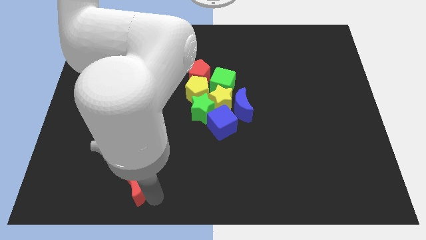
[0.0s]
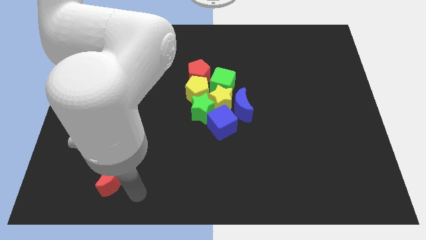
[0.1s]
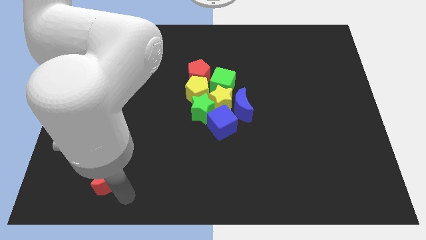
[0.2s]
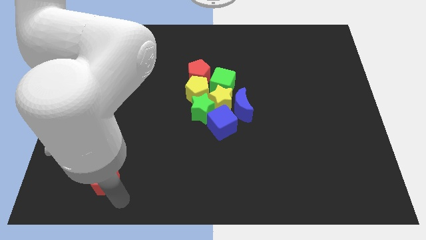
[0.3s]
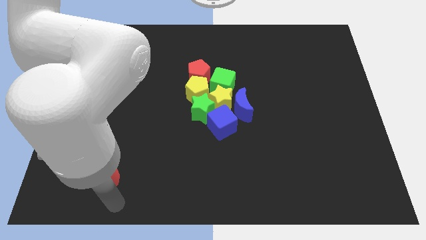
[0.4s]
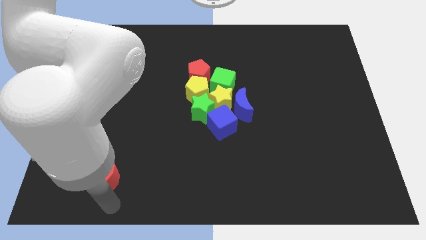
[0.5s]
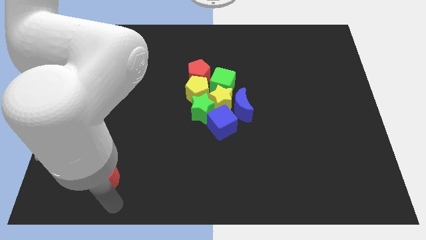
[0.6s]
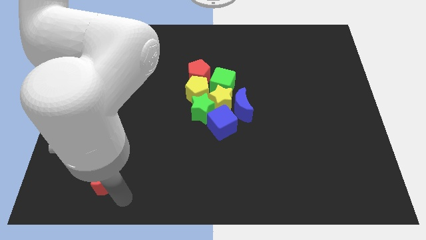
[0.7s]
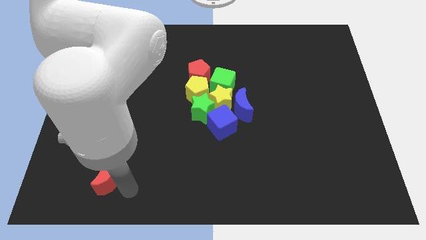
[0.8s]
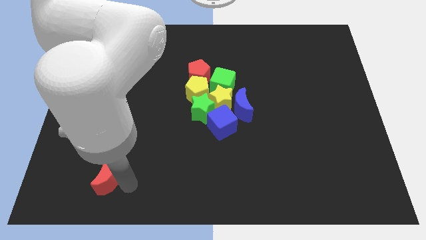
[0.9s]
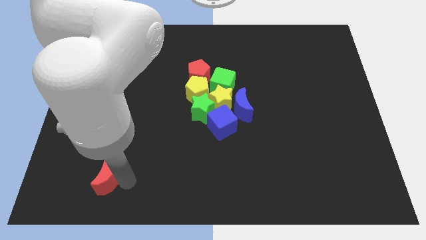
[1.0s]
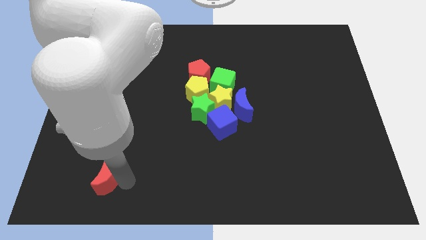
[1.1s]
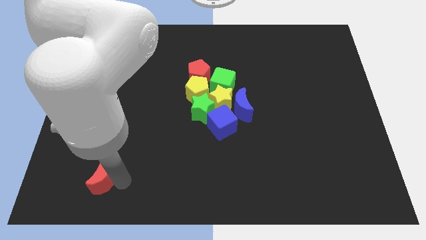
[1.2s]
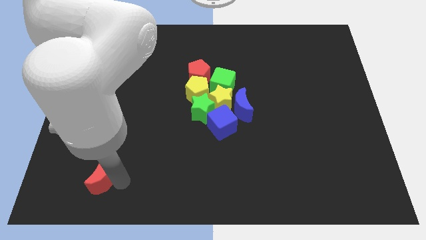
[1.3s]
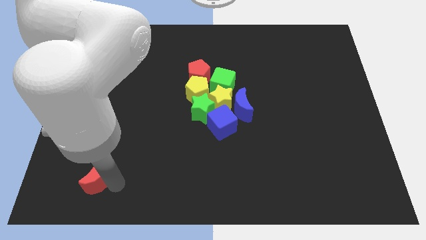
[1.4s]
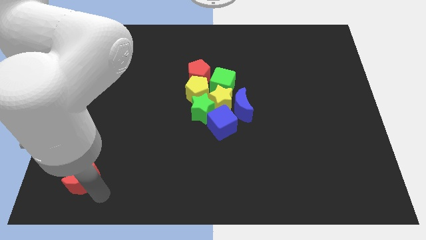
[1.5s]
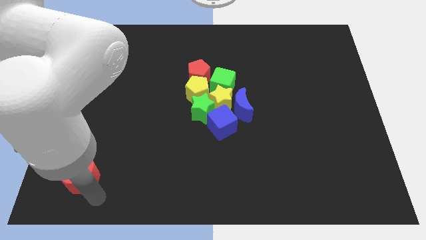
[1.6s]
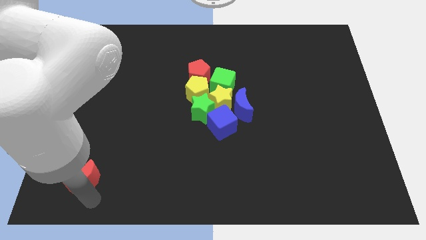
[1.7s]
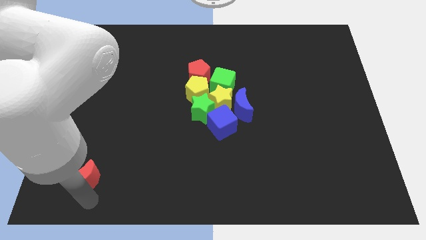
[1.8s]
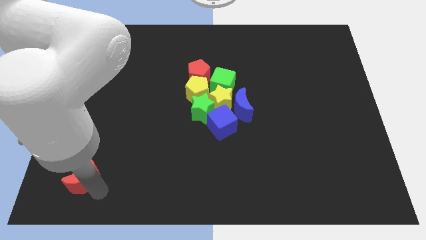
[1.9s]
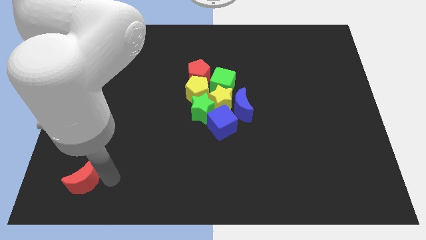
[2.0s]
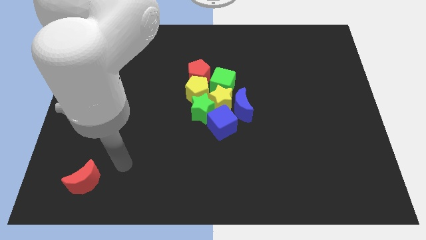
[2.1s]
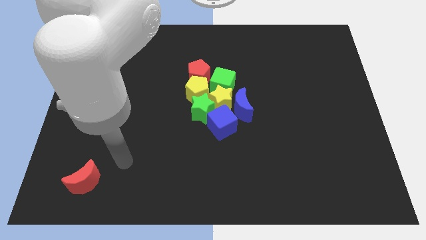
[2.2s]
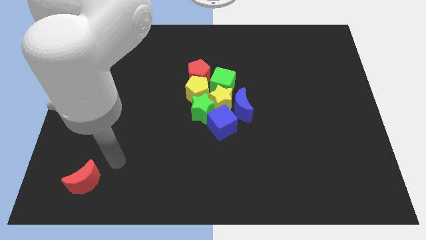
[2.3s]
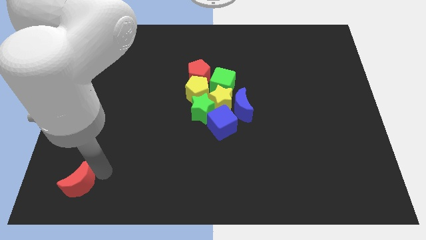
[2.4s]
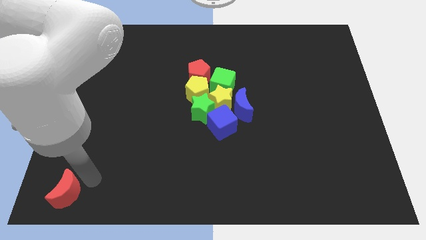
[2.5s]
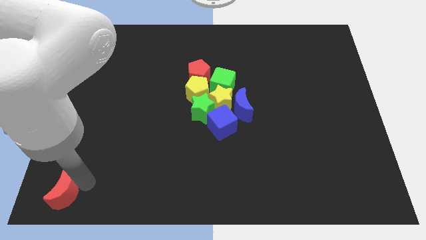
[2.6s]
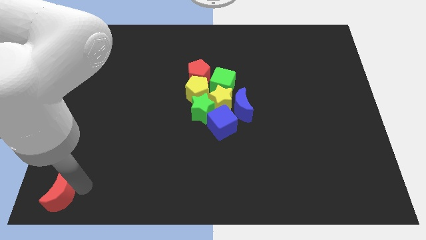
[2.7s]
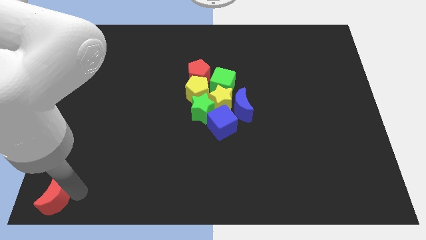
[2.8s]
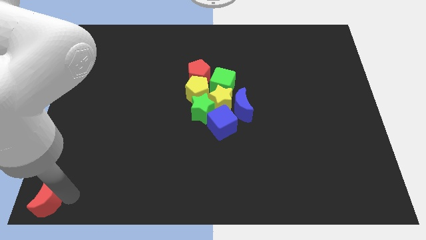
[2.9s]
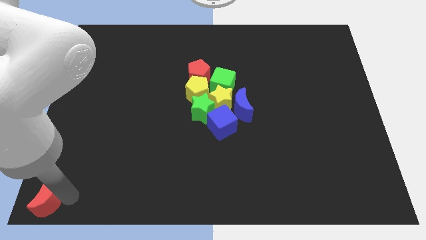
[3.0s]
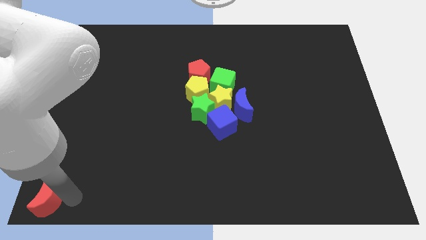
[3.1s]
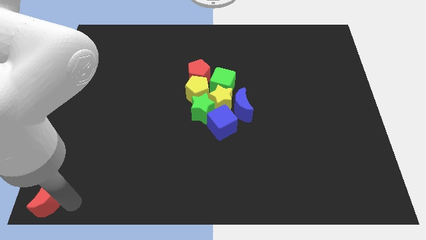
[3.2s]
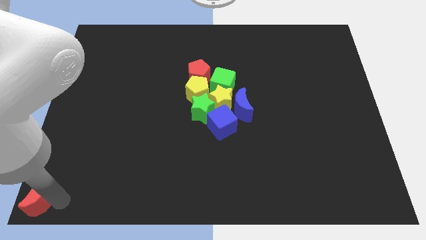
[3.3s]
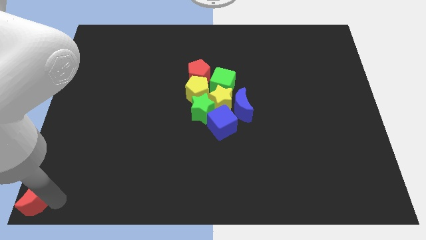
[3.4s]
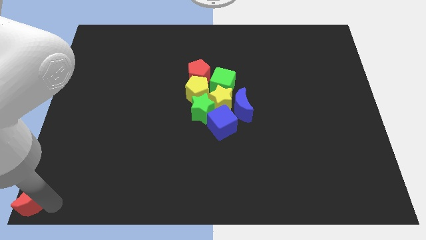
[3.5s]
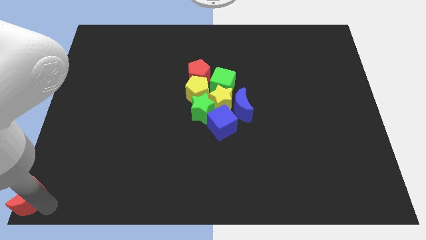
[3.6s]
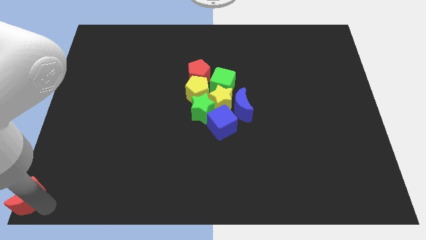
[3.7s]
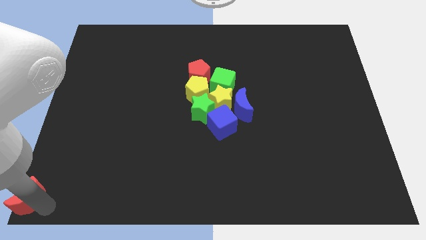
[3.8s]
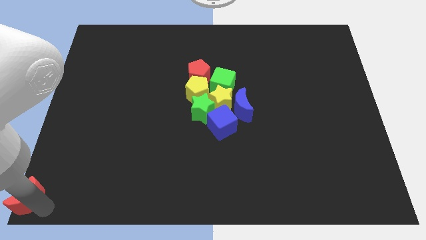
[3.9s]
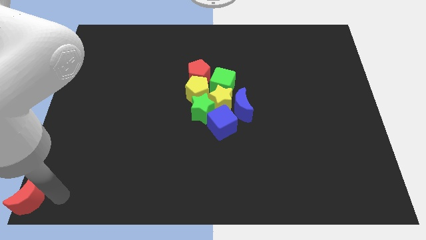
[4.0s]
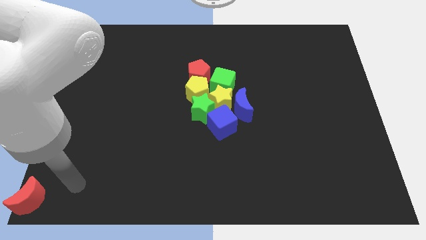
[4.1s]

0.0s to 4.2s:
slide the red crescent to the bottom left corner

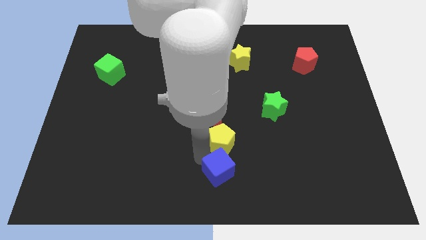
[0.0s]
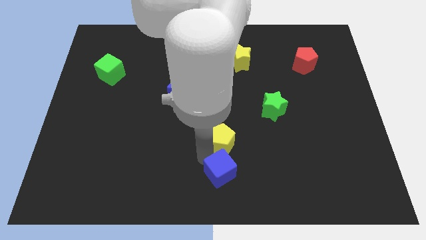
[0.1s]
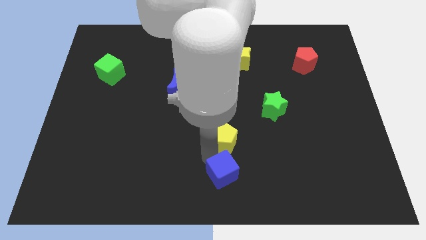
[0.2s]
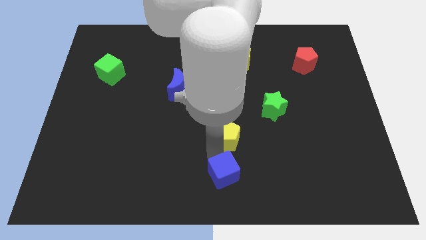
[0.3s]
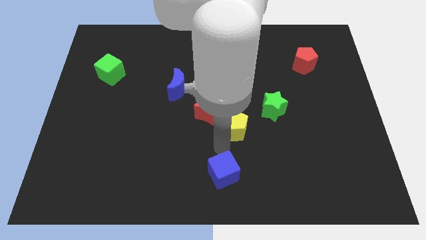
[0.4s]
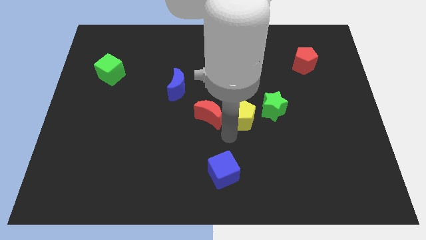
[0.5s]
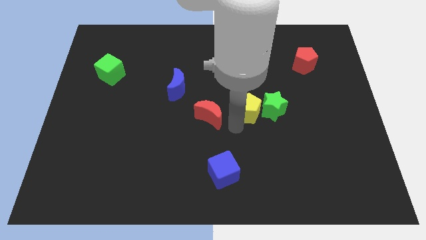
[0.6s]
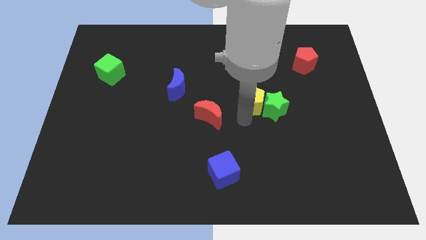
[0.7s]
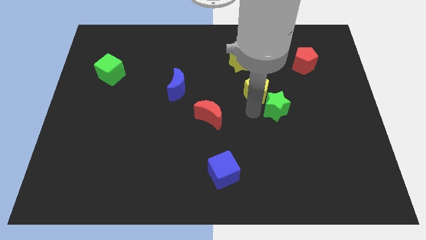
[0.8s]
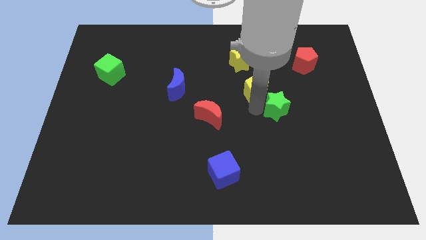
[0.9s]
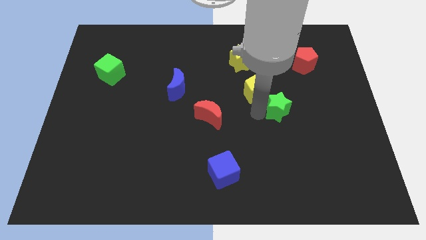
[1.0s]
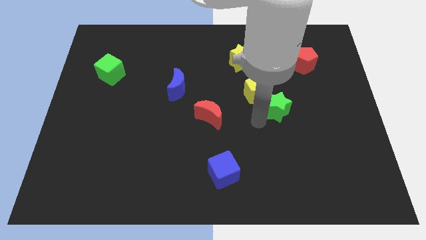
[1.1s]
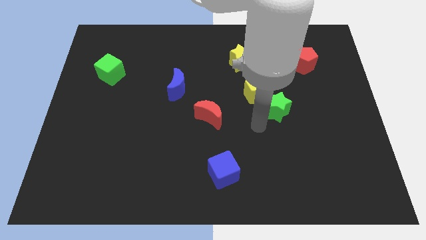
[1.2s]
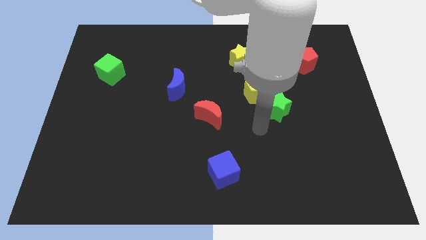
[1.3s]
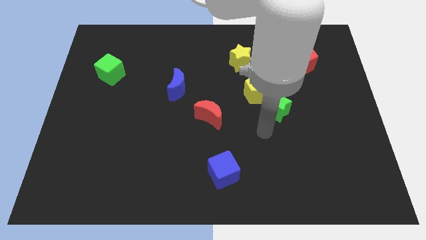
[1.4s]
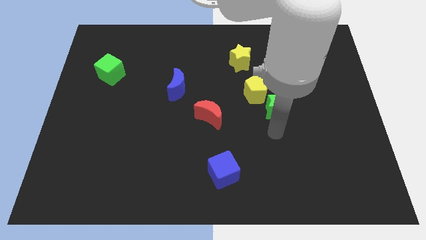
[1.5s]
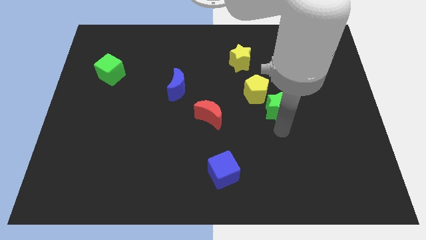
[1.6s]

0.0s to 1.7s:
move the yellow pentagon in between yellow star and green star

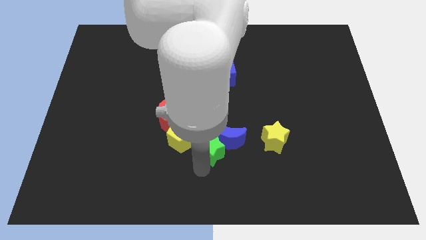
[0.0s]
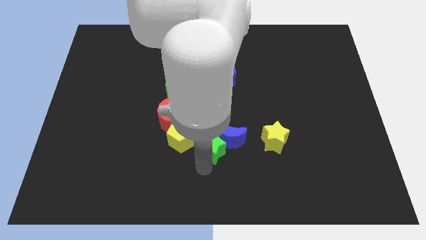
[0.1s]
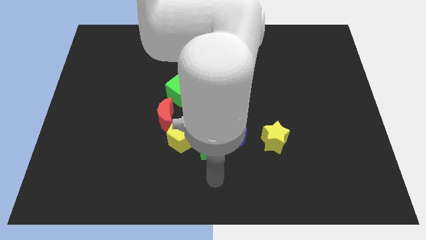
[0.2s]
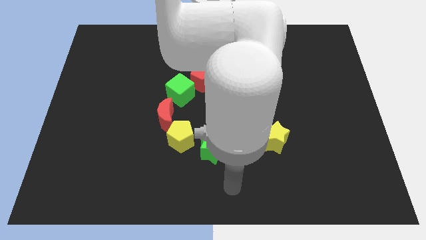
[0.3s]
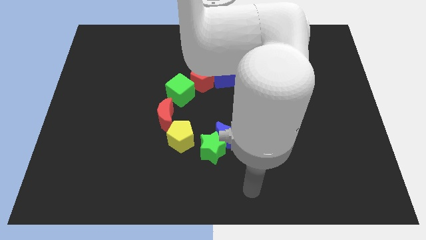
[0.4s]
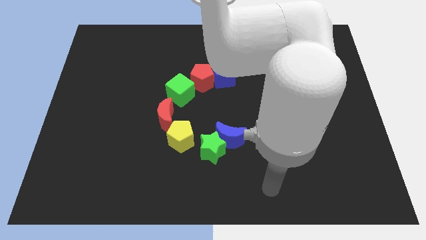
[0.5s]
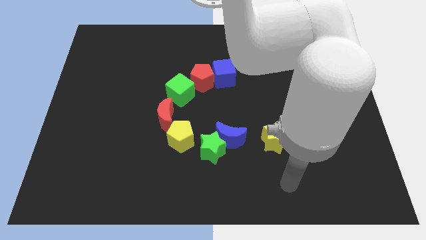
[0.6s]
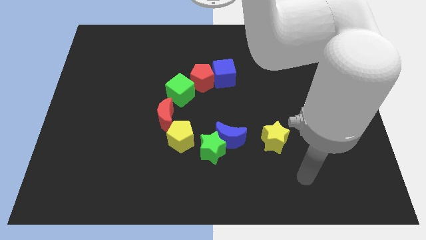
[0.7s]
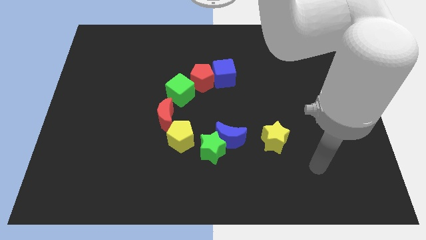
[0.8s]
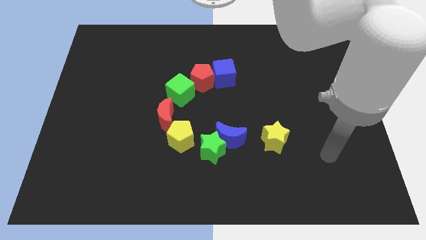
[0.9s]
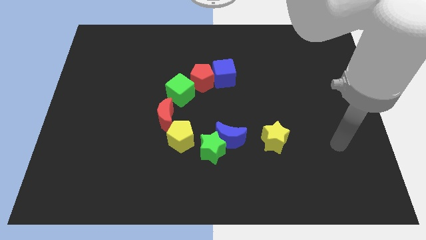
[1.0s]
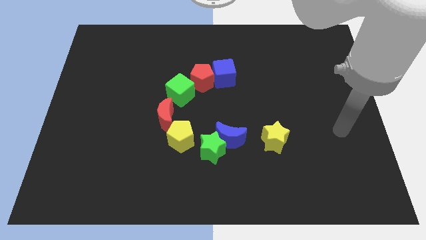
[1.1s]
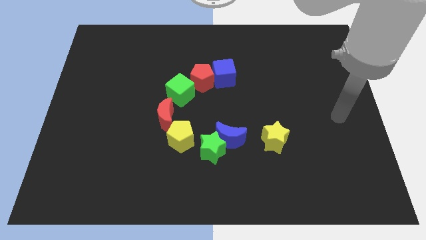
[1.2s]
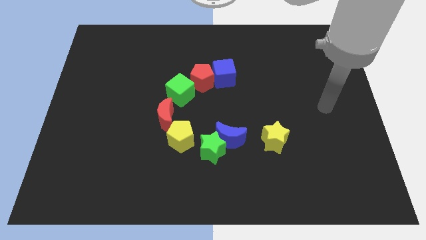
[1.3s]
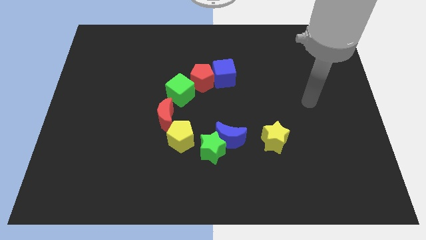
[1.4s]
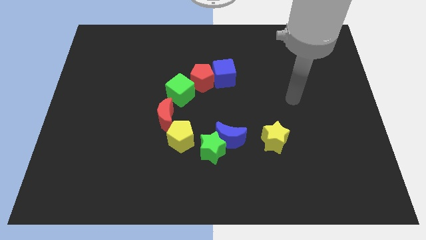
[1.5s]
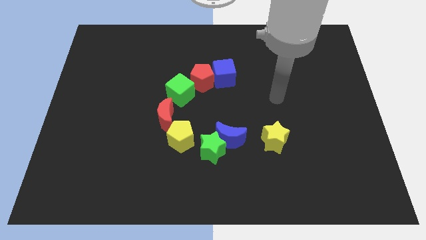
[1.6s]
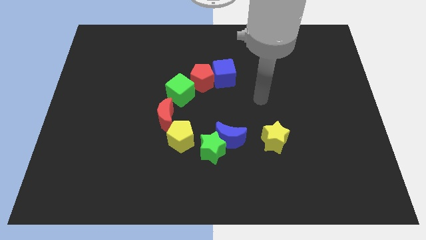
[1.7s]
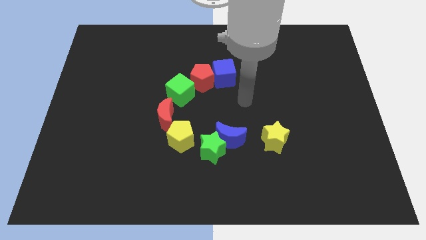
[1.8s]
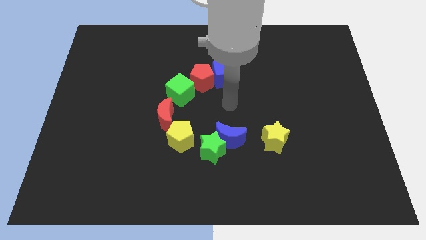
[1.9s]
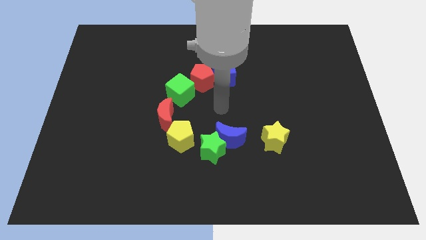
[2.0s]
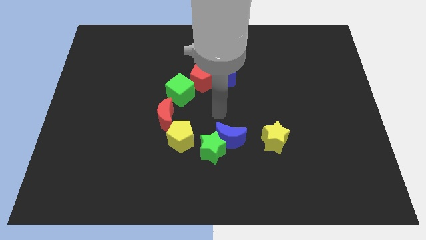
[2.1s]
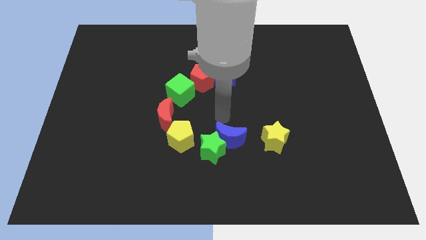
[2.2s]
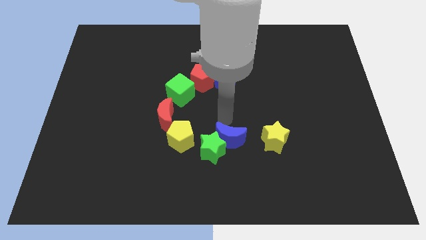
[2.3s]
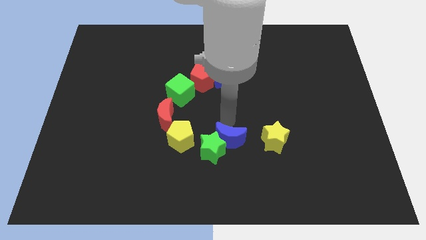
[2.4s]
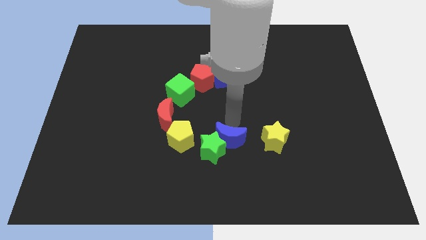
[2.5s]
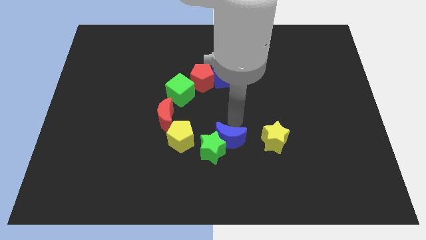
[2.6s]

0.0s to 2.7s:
go near the blue moon

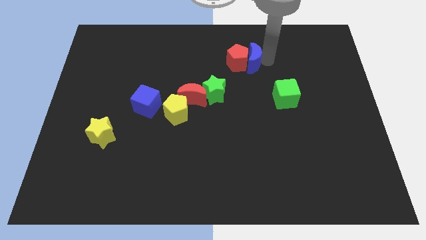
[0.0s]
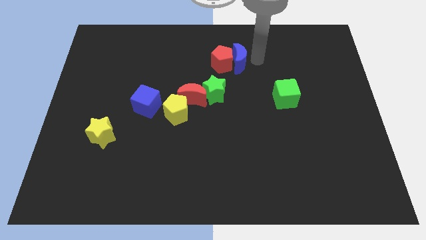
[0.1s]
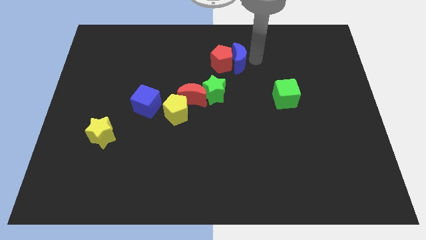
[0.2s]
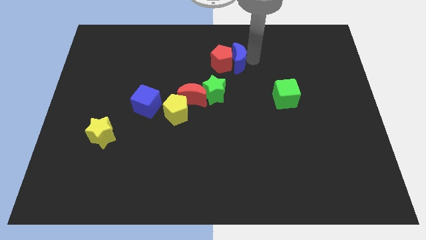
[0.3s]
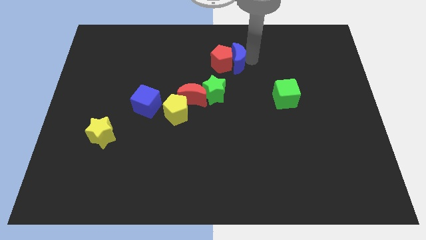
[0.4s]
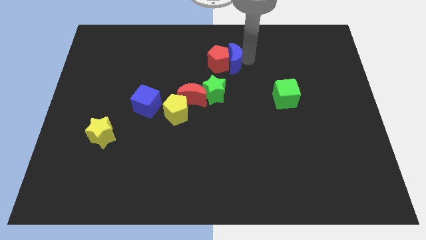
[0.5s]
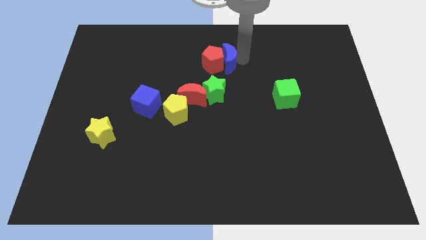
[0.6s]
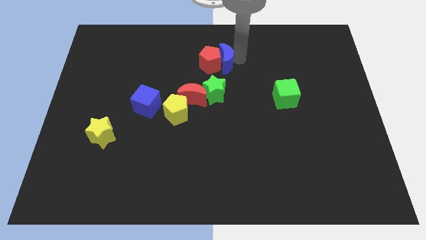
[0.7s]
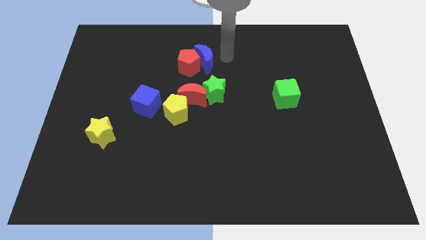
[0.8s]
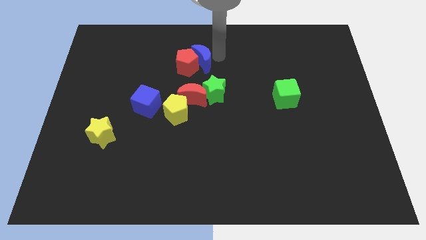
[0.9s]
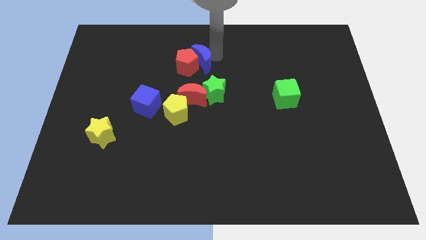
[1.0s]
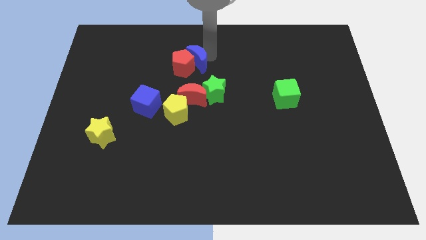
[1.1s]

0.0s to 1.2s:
push the blue moon and red pentagon towards the left side of the board
